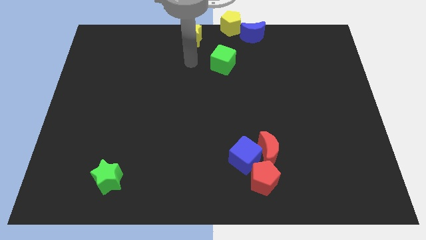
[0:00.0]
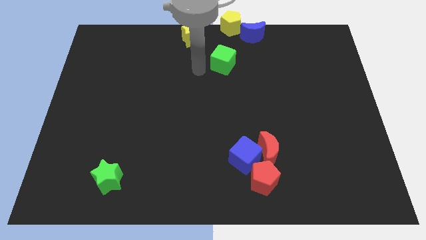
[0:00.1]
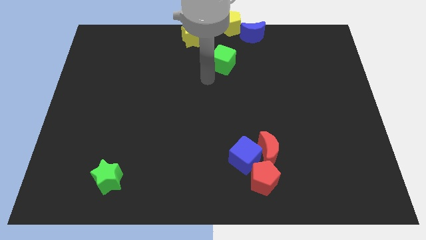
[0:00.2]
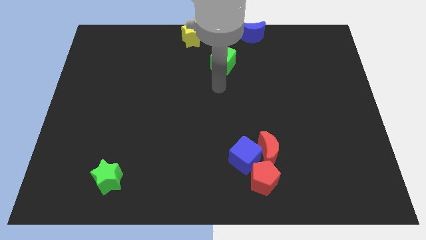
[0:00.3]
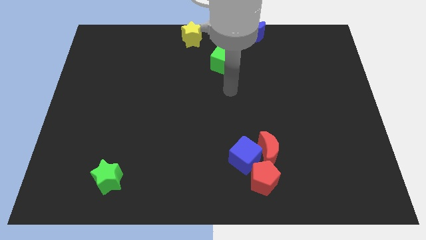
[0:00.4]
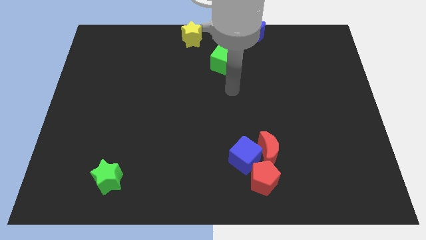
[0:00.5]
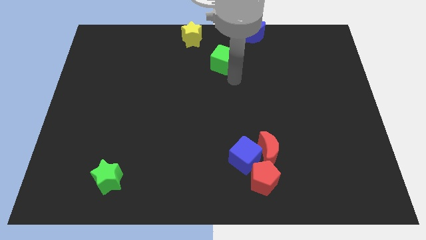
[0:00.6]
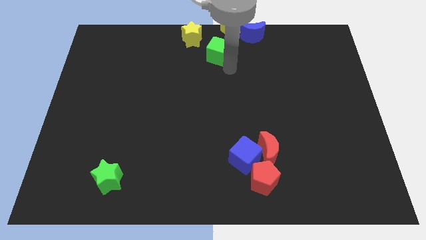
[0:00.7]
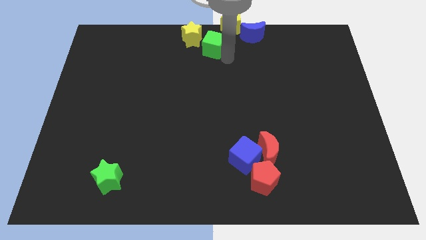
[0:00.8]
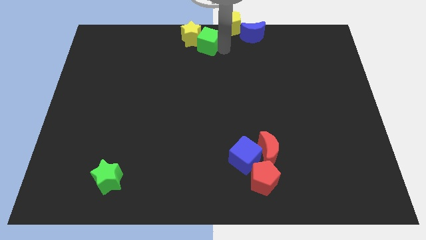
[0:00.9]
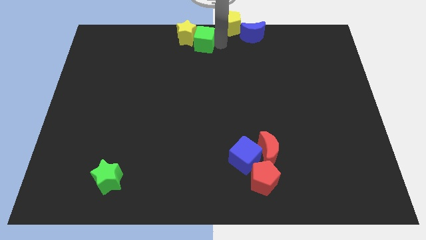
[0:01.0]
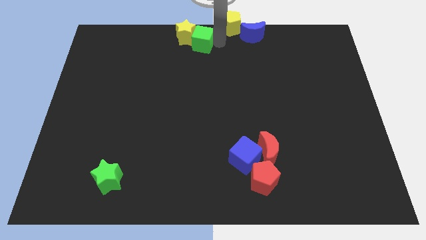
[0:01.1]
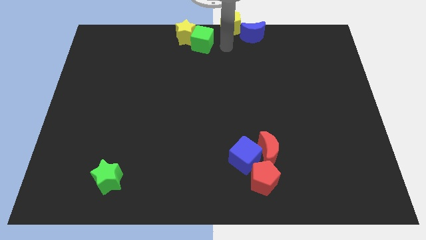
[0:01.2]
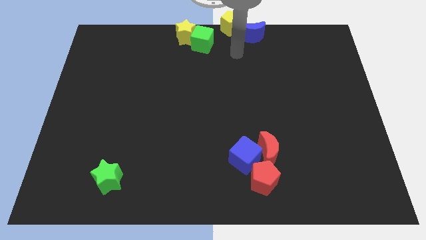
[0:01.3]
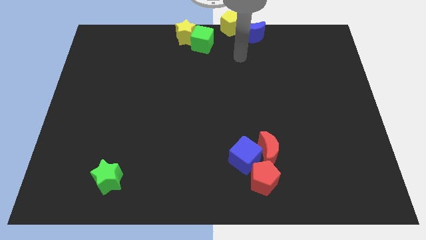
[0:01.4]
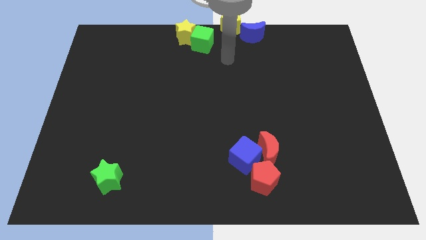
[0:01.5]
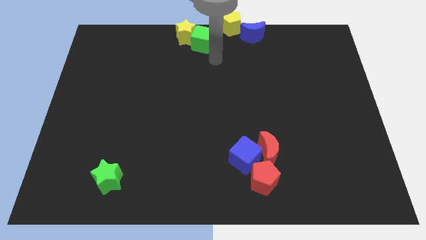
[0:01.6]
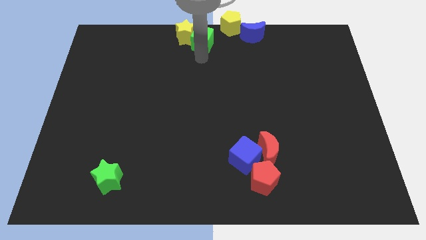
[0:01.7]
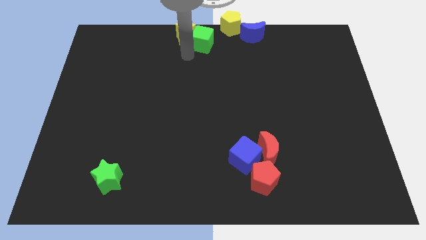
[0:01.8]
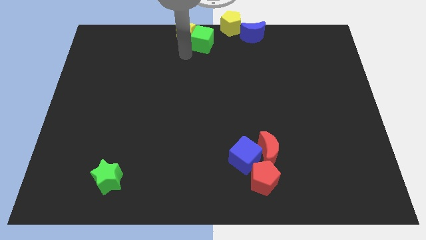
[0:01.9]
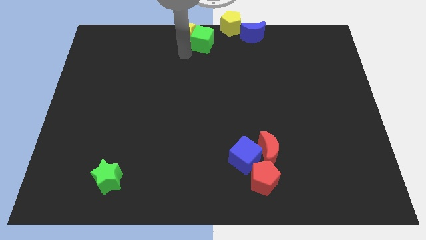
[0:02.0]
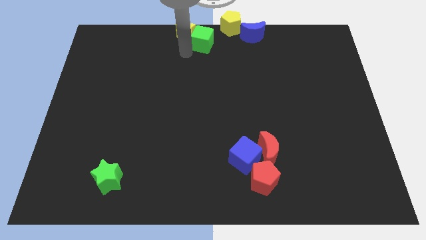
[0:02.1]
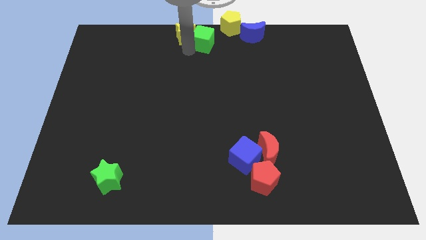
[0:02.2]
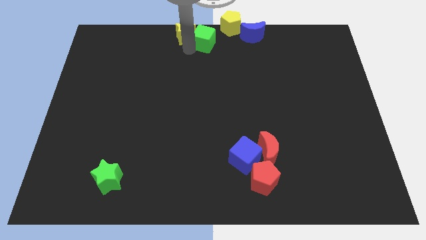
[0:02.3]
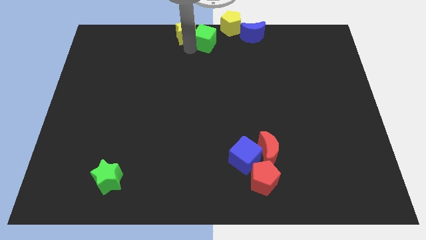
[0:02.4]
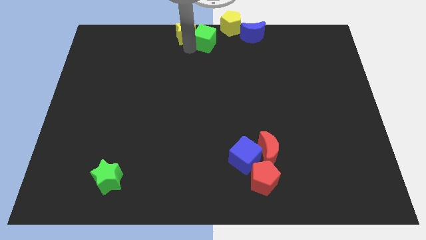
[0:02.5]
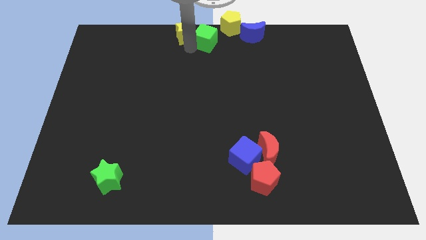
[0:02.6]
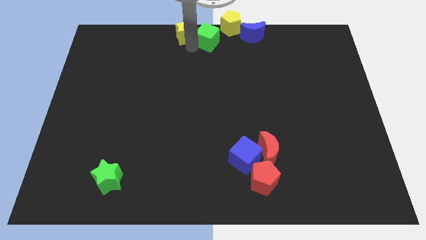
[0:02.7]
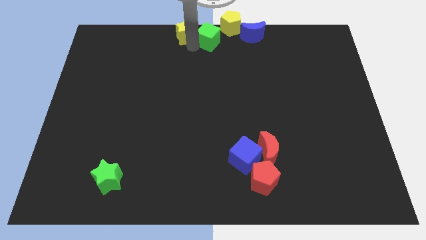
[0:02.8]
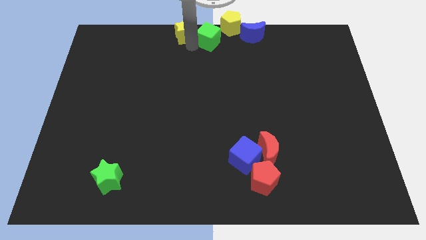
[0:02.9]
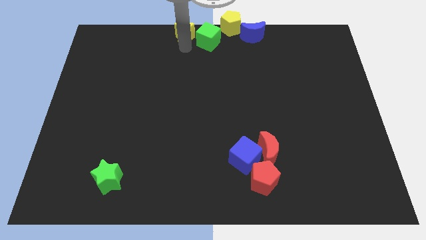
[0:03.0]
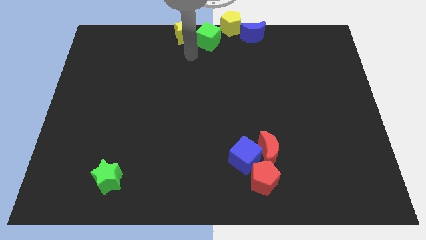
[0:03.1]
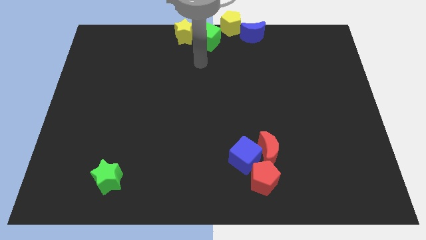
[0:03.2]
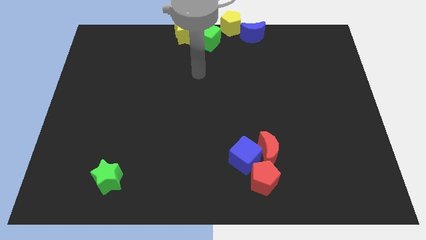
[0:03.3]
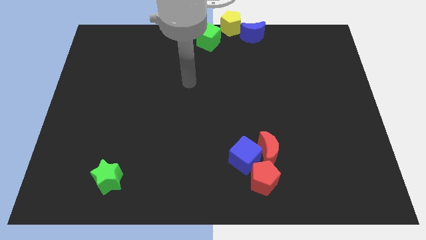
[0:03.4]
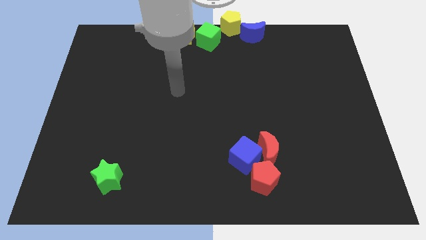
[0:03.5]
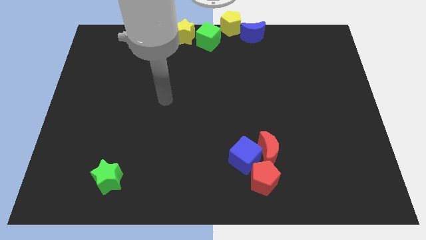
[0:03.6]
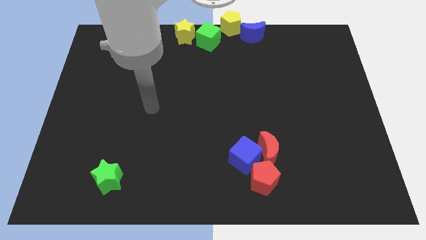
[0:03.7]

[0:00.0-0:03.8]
push the green cube to the right side of the yellow star

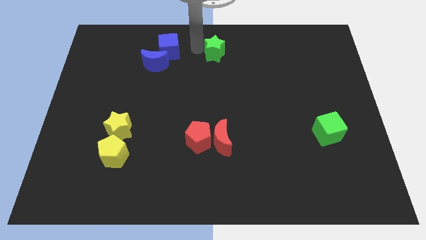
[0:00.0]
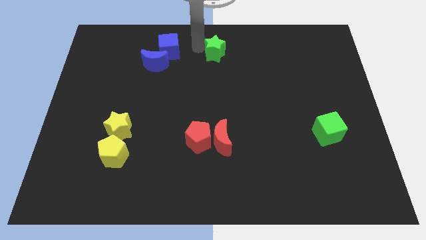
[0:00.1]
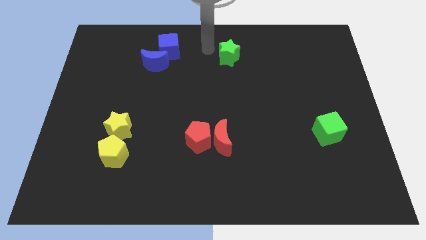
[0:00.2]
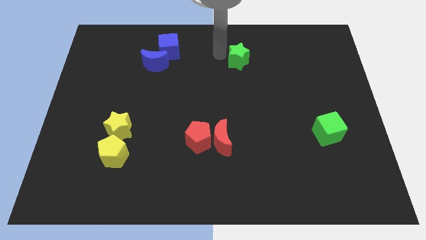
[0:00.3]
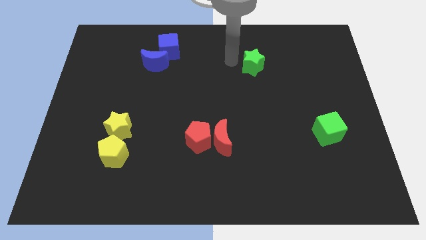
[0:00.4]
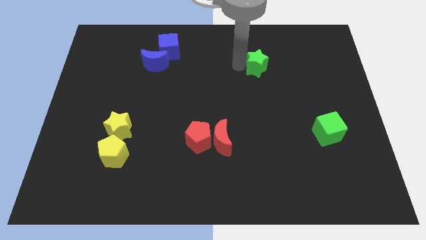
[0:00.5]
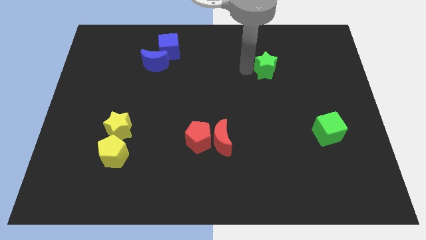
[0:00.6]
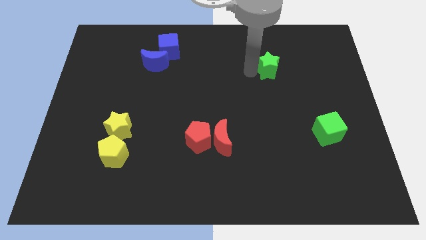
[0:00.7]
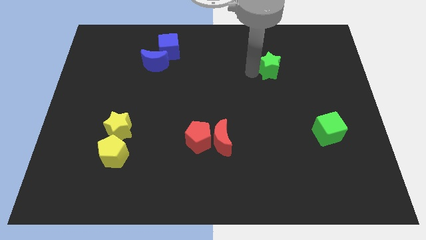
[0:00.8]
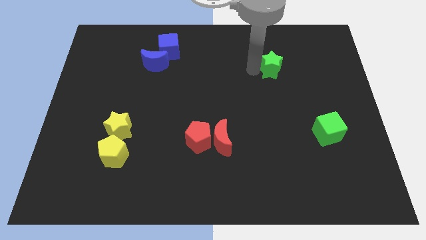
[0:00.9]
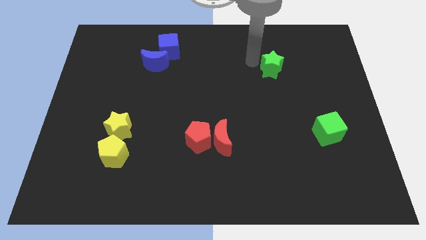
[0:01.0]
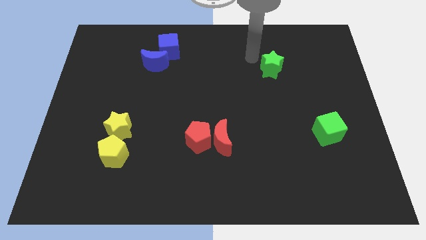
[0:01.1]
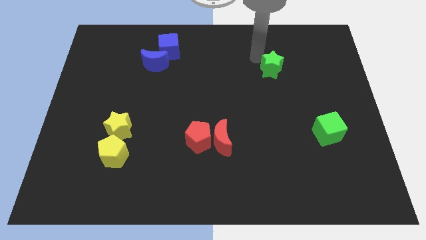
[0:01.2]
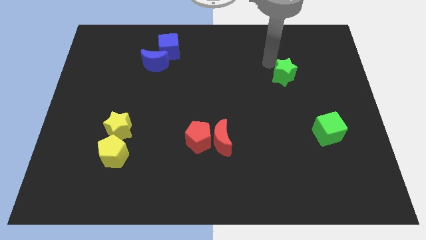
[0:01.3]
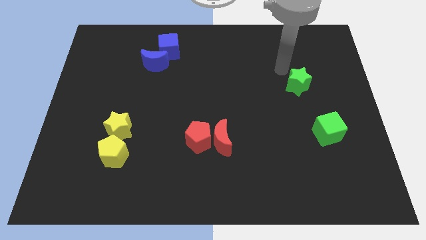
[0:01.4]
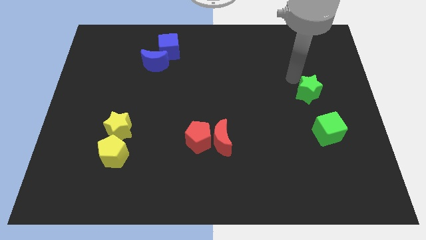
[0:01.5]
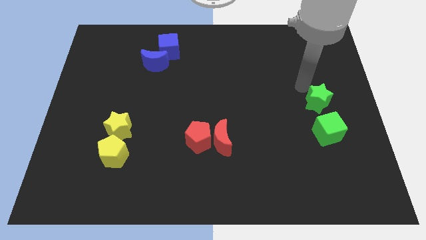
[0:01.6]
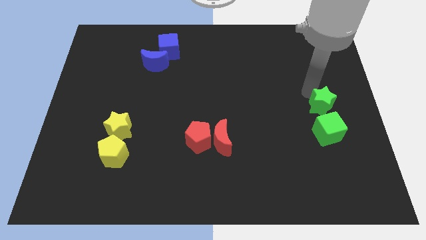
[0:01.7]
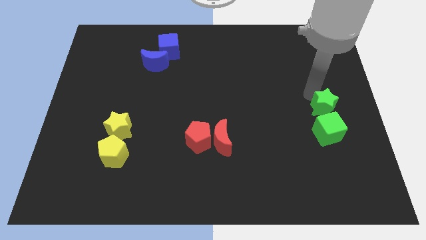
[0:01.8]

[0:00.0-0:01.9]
place the green star at the top of green cube

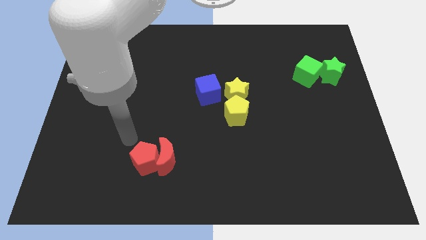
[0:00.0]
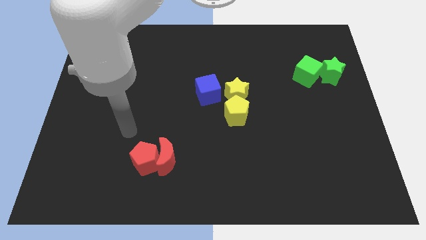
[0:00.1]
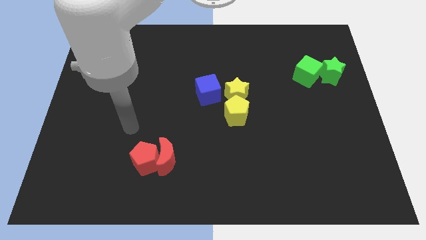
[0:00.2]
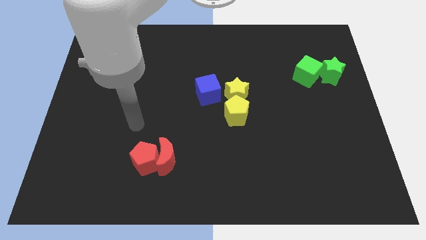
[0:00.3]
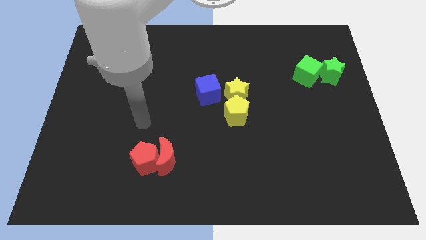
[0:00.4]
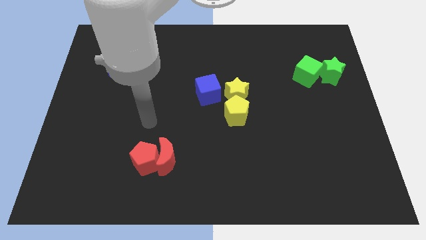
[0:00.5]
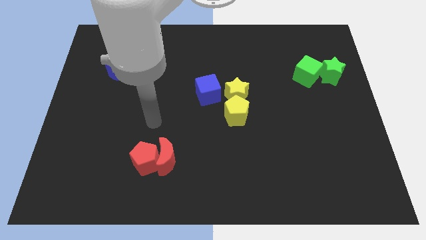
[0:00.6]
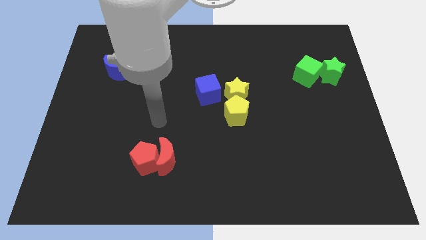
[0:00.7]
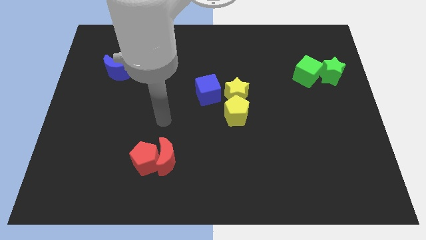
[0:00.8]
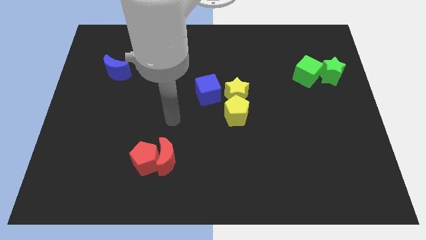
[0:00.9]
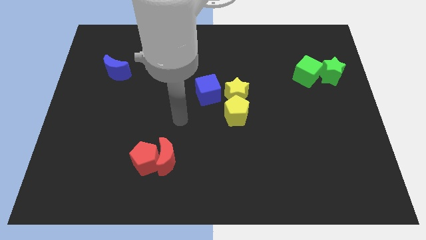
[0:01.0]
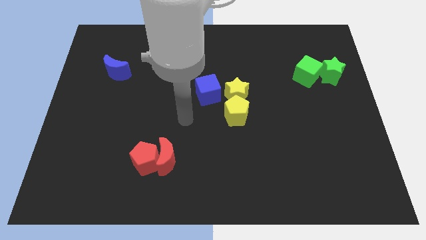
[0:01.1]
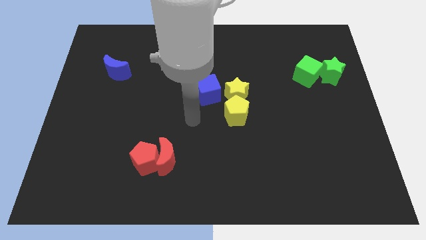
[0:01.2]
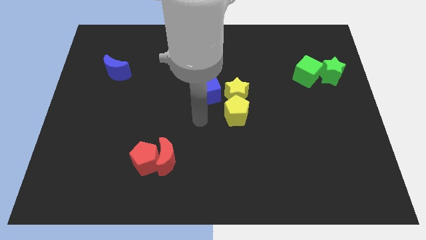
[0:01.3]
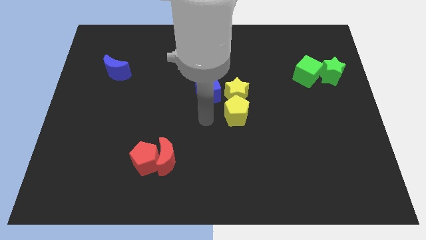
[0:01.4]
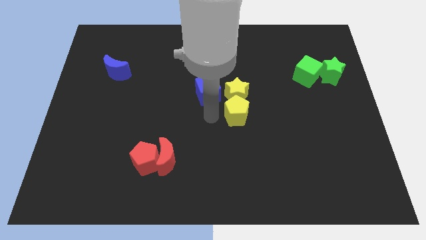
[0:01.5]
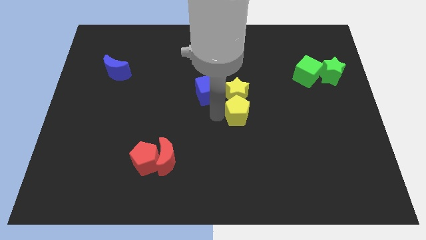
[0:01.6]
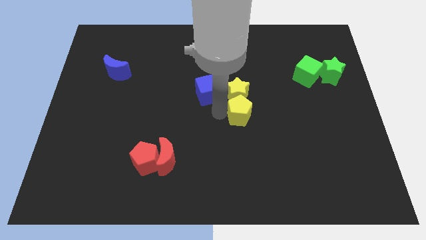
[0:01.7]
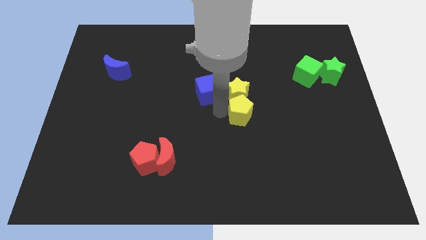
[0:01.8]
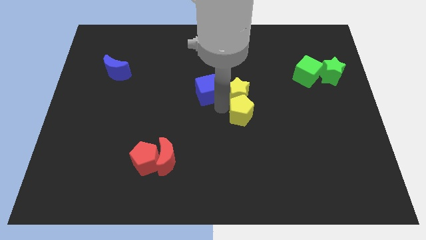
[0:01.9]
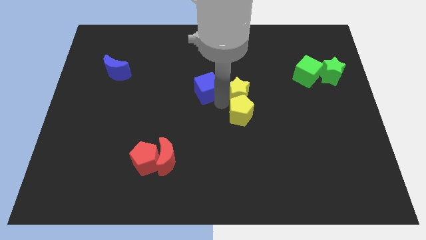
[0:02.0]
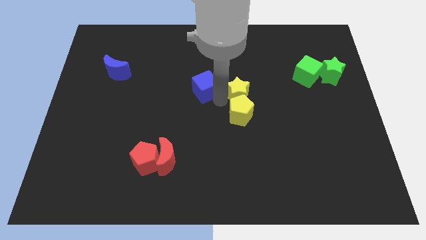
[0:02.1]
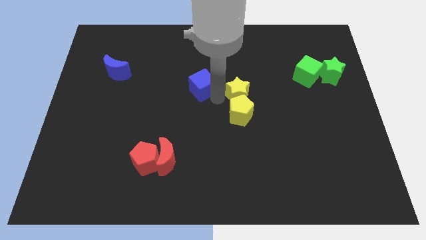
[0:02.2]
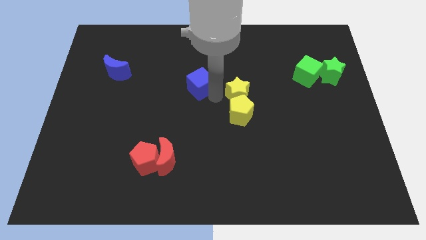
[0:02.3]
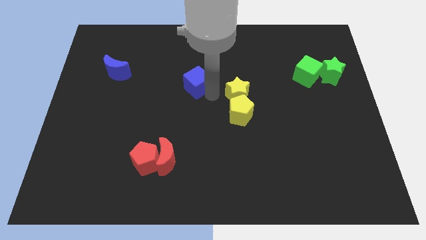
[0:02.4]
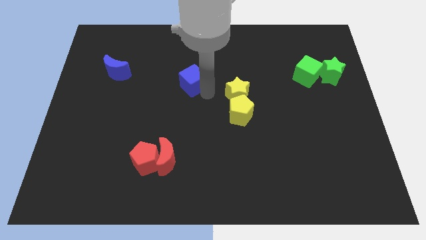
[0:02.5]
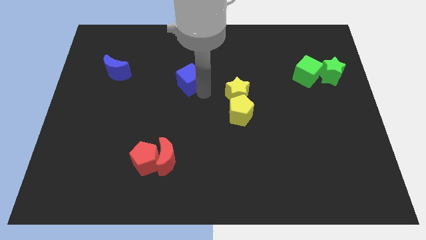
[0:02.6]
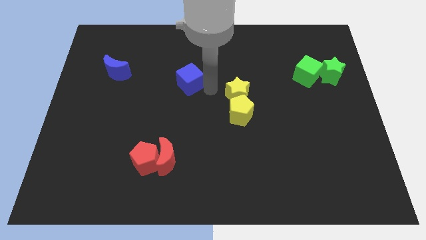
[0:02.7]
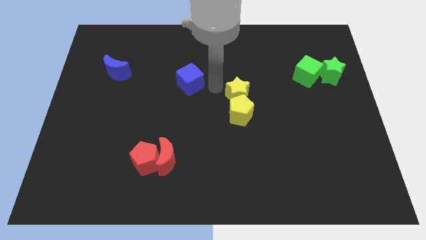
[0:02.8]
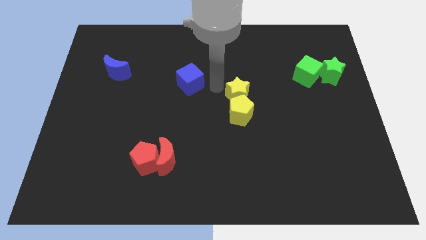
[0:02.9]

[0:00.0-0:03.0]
separate the blue cube with yellow star towards the blue moon

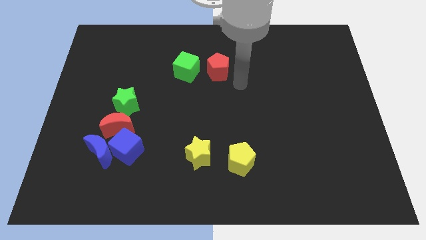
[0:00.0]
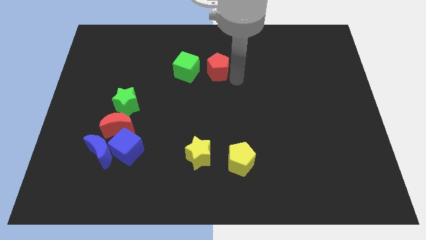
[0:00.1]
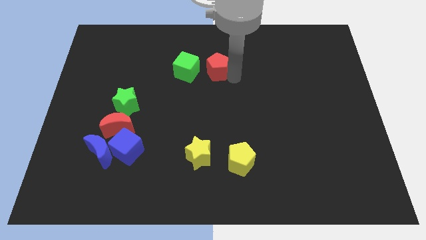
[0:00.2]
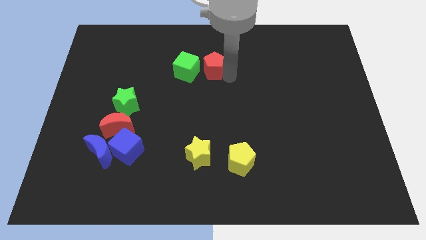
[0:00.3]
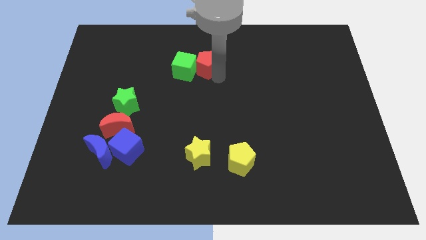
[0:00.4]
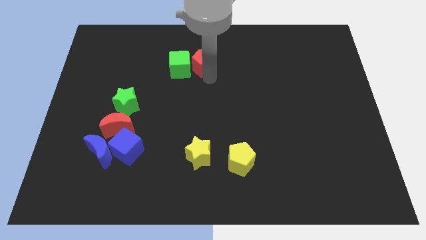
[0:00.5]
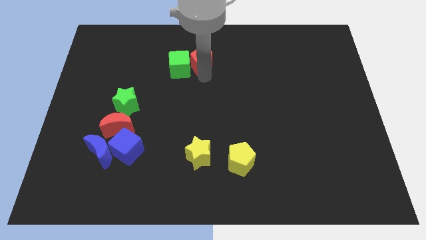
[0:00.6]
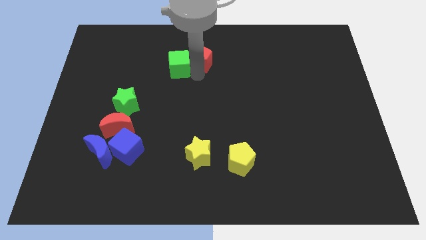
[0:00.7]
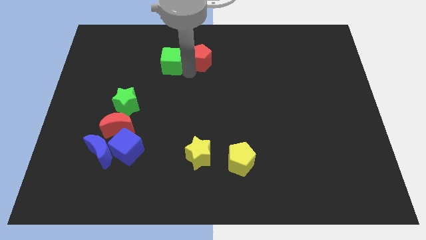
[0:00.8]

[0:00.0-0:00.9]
move the red pentagon into the green cube
